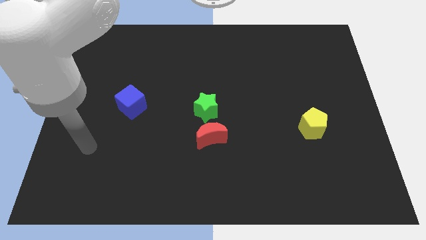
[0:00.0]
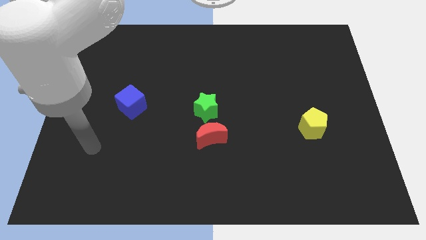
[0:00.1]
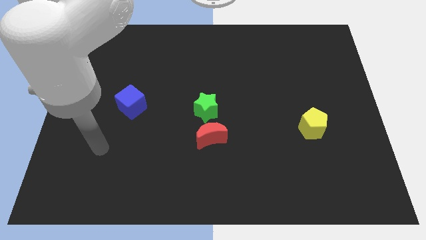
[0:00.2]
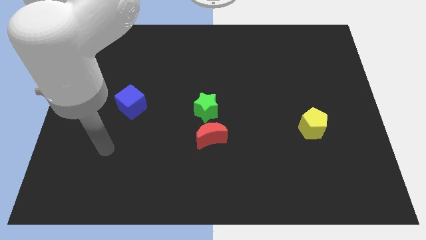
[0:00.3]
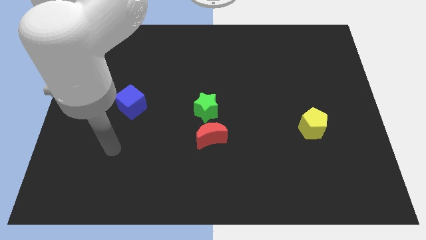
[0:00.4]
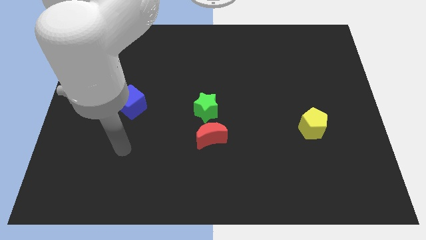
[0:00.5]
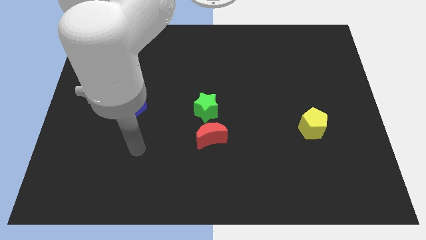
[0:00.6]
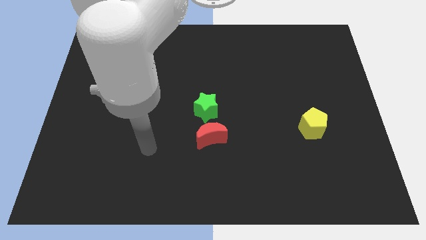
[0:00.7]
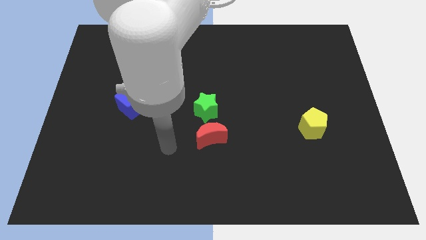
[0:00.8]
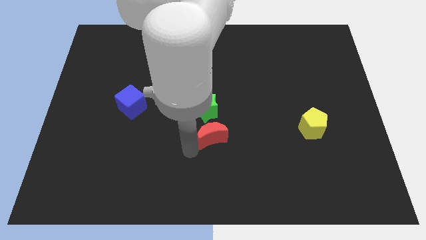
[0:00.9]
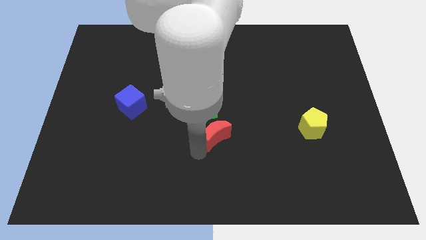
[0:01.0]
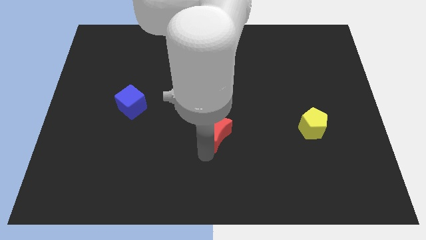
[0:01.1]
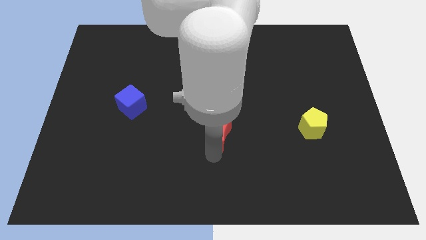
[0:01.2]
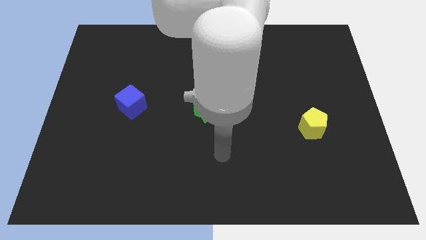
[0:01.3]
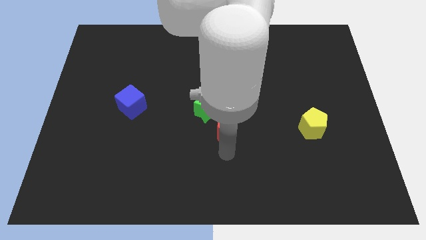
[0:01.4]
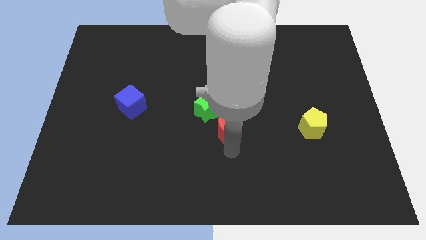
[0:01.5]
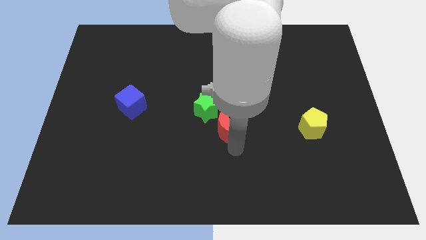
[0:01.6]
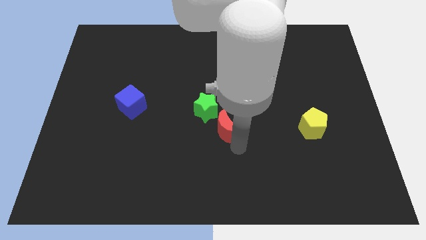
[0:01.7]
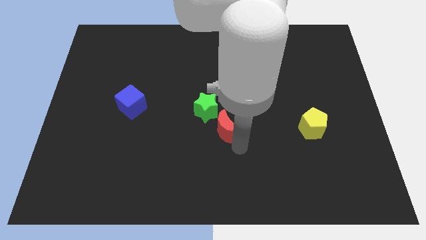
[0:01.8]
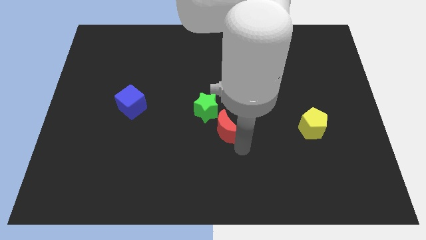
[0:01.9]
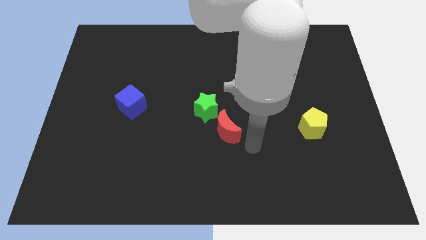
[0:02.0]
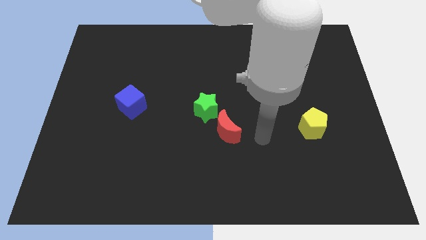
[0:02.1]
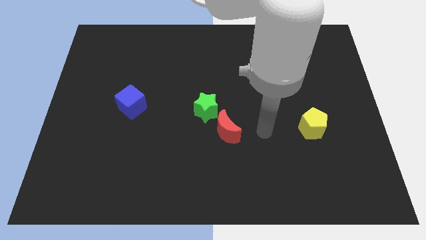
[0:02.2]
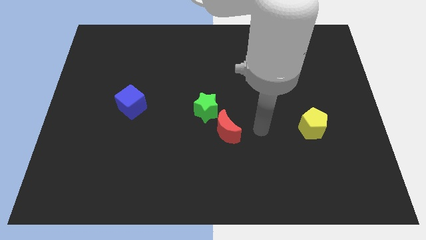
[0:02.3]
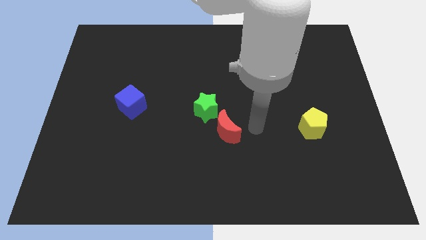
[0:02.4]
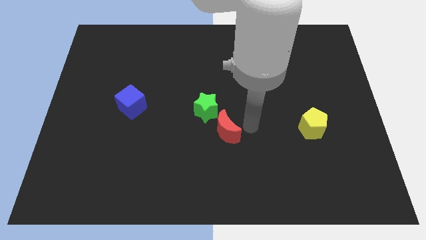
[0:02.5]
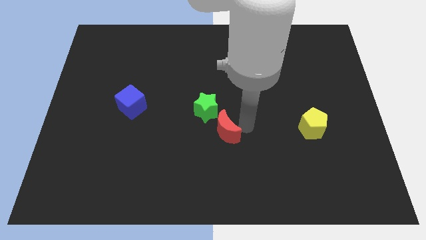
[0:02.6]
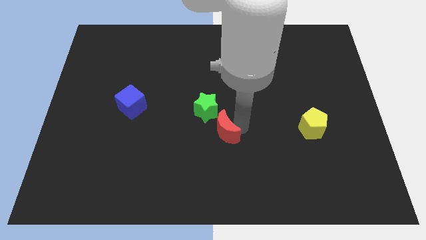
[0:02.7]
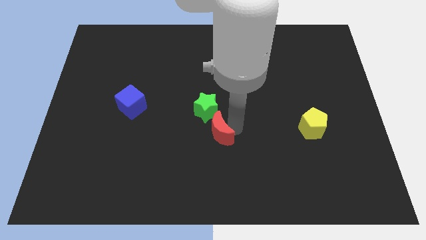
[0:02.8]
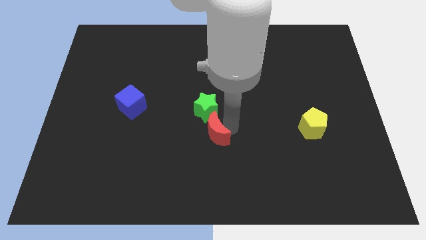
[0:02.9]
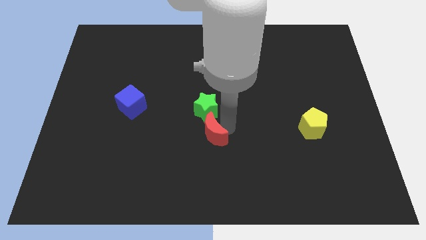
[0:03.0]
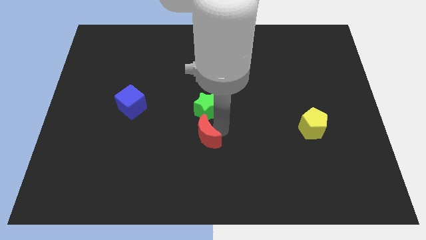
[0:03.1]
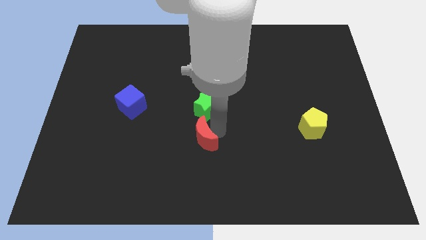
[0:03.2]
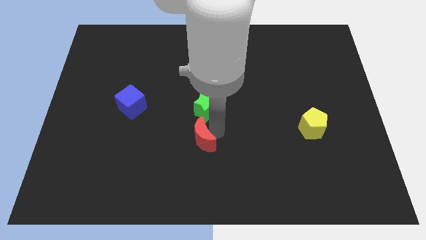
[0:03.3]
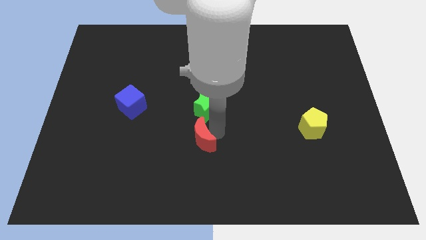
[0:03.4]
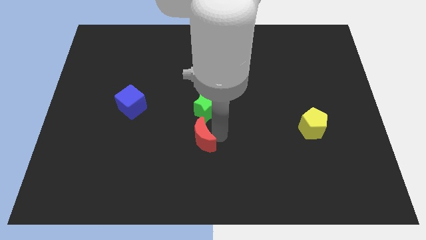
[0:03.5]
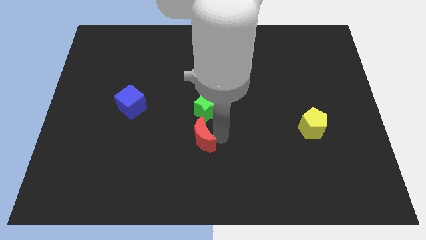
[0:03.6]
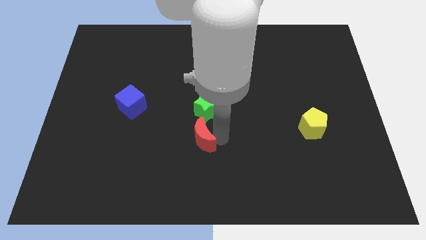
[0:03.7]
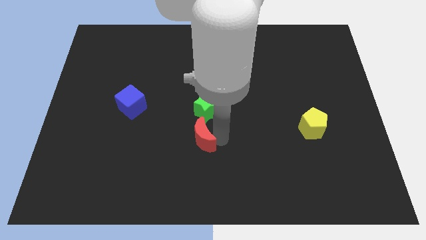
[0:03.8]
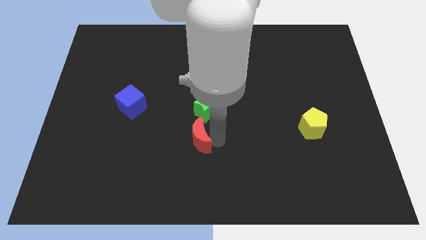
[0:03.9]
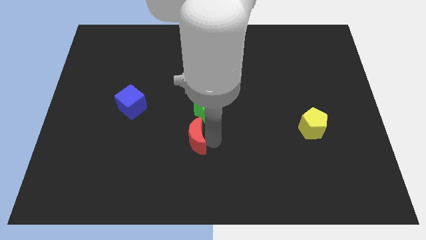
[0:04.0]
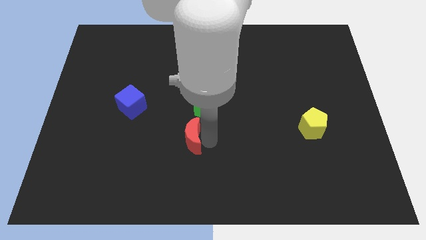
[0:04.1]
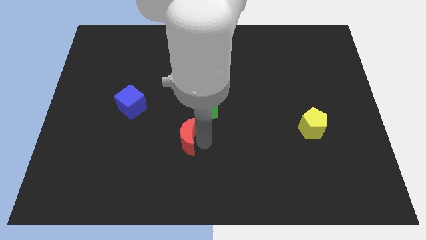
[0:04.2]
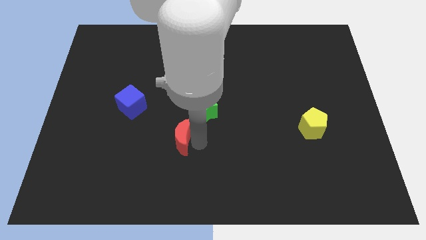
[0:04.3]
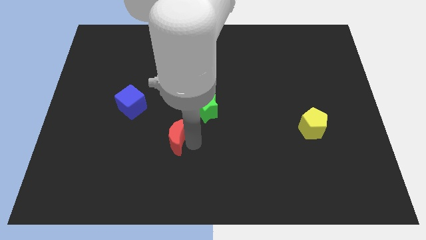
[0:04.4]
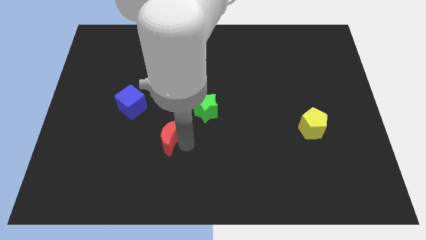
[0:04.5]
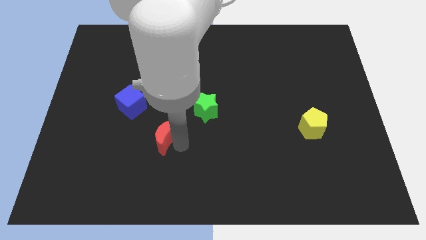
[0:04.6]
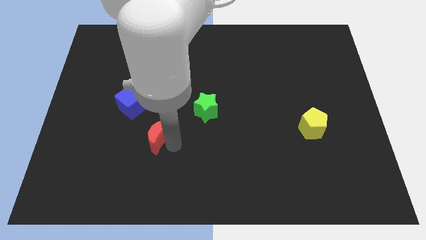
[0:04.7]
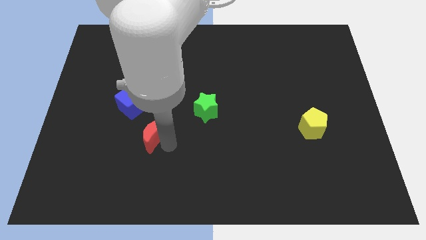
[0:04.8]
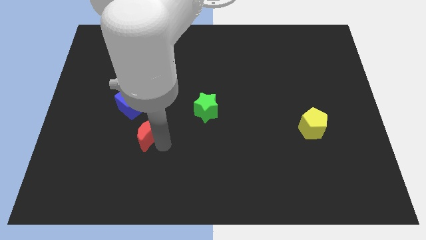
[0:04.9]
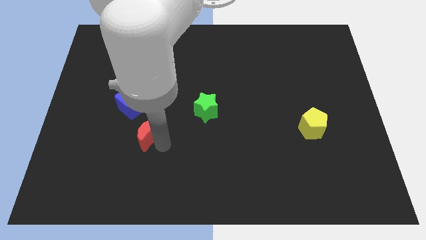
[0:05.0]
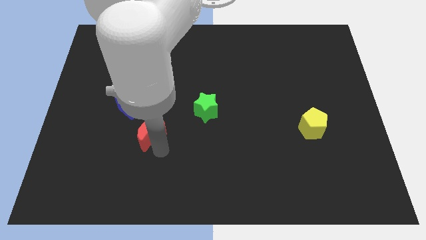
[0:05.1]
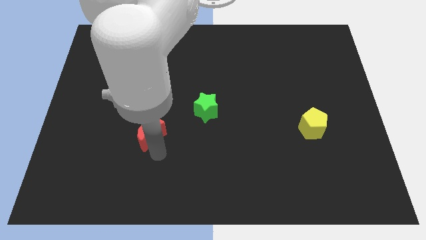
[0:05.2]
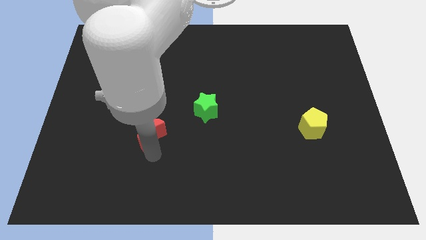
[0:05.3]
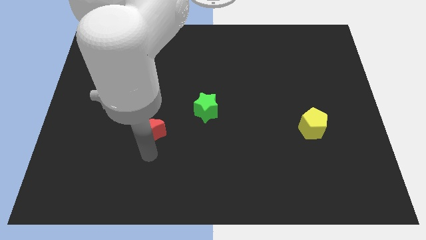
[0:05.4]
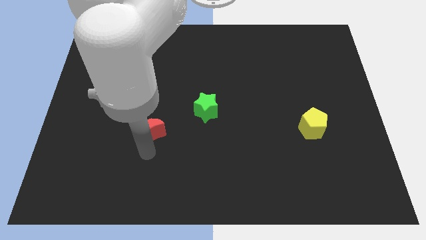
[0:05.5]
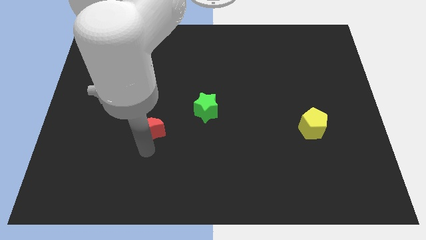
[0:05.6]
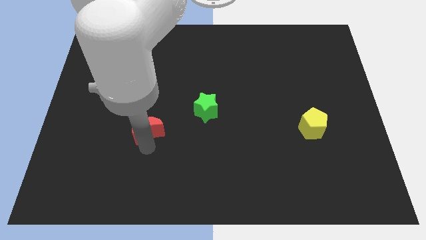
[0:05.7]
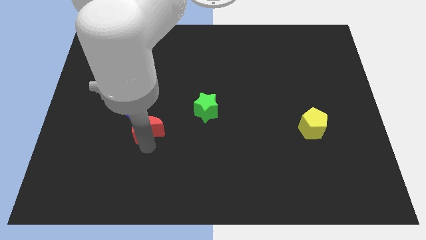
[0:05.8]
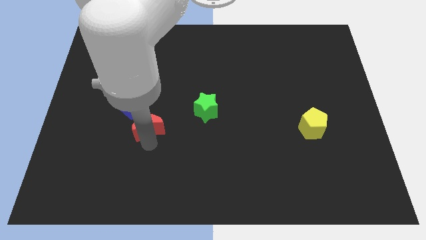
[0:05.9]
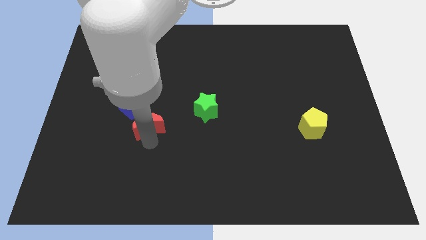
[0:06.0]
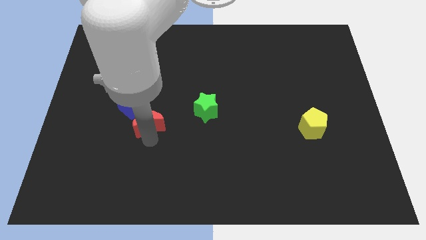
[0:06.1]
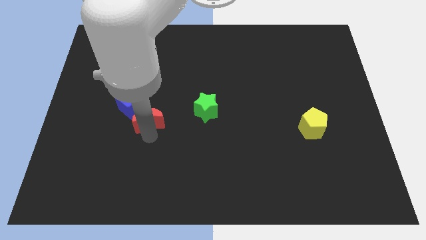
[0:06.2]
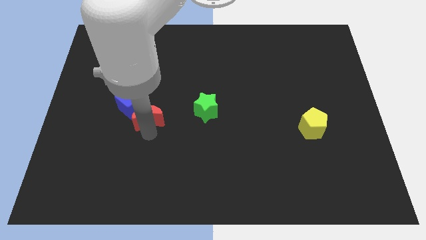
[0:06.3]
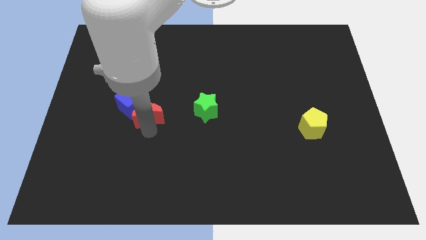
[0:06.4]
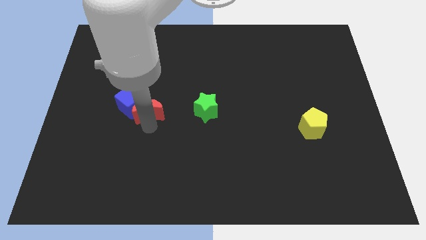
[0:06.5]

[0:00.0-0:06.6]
move the red moon towards the blue block

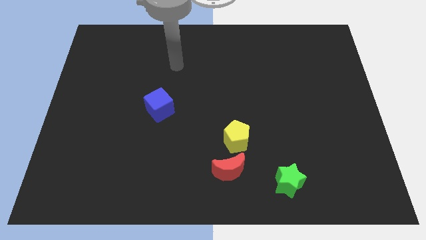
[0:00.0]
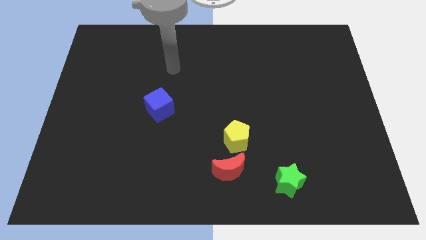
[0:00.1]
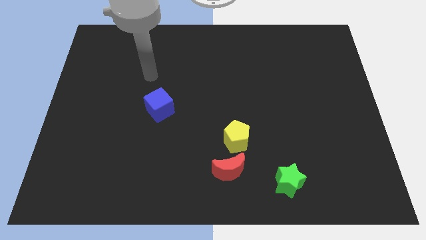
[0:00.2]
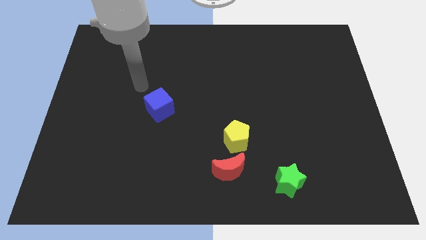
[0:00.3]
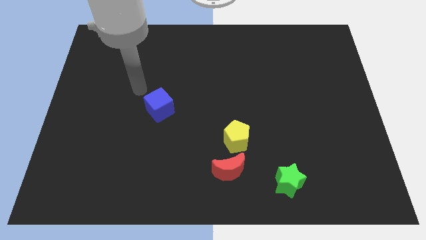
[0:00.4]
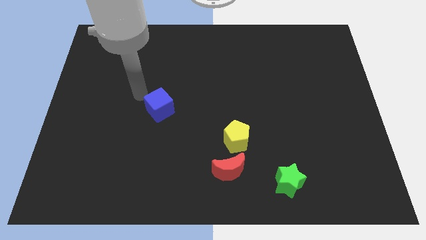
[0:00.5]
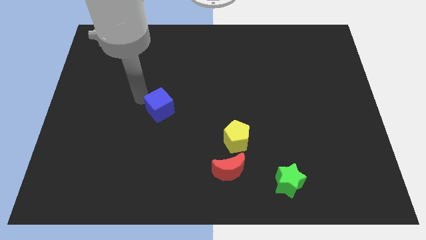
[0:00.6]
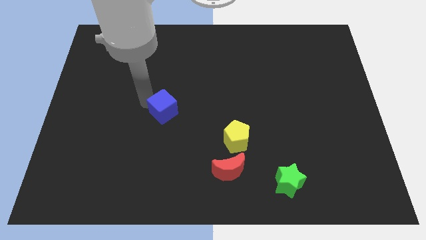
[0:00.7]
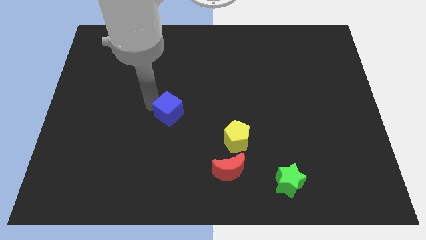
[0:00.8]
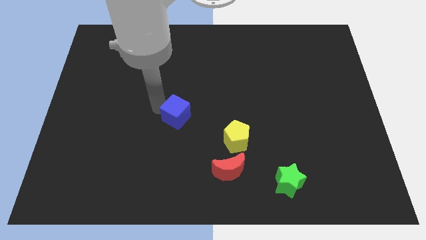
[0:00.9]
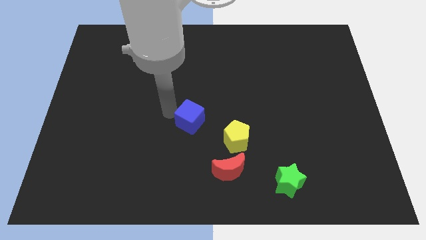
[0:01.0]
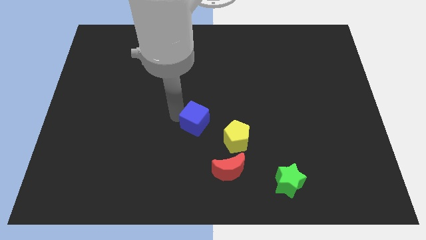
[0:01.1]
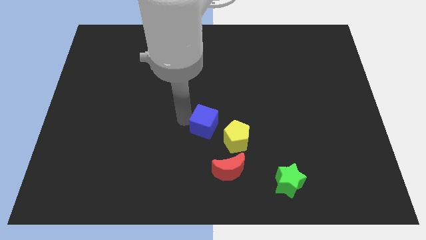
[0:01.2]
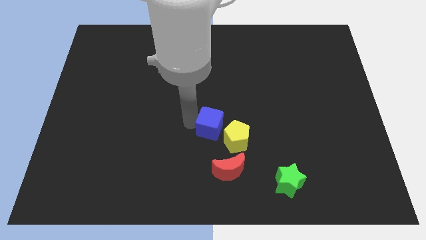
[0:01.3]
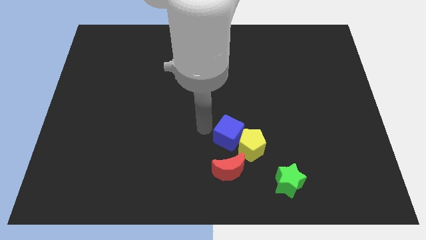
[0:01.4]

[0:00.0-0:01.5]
put the cube next to the yellow block

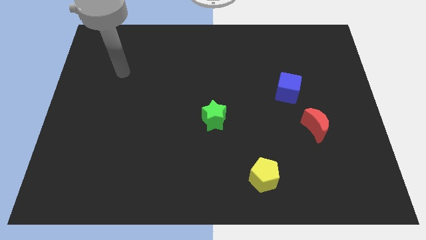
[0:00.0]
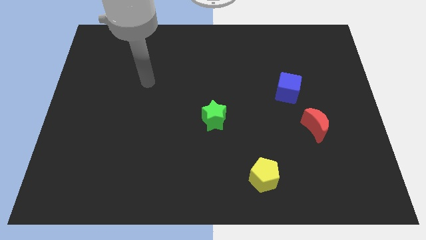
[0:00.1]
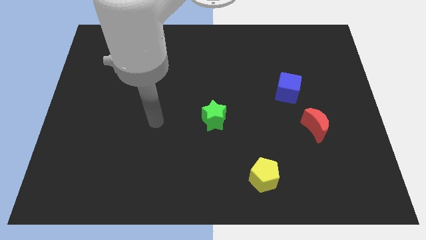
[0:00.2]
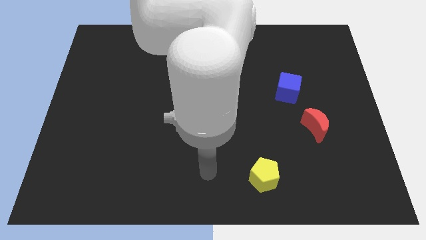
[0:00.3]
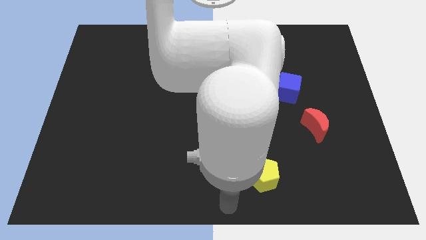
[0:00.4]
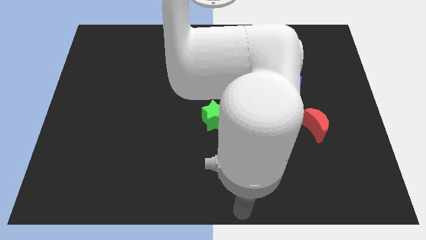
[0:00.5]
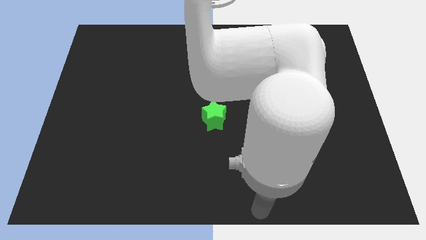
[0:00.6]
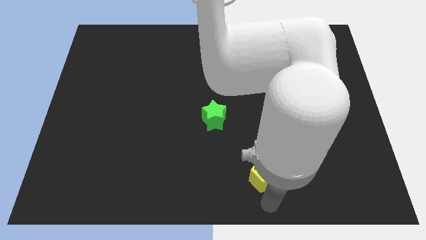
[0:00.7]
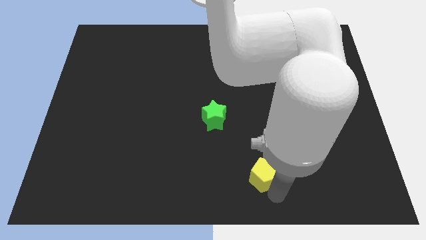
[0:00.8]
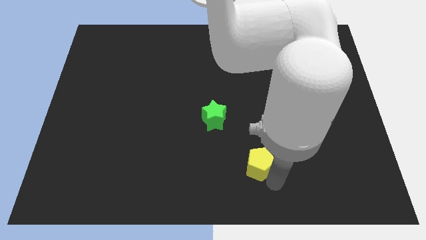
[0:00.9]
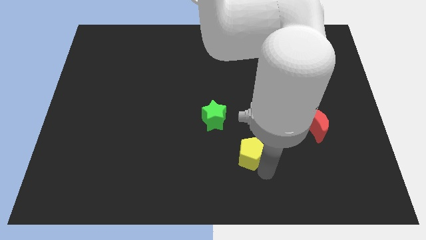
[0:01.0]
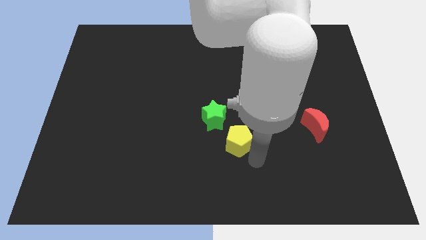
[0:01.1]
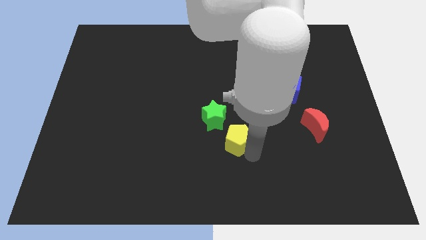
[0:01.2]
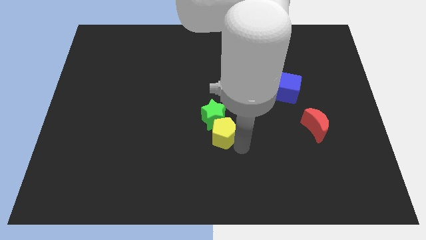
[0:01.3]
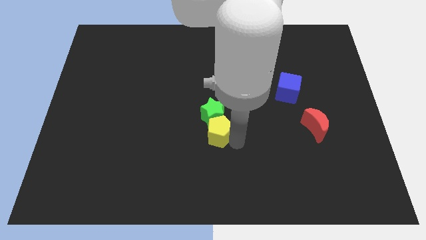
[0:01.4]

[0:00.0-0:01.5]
slide the yellow block next to the green block
